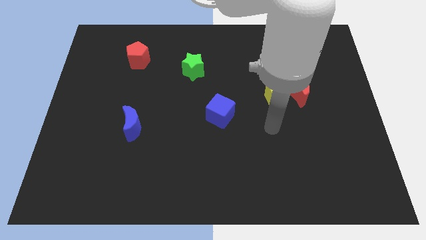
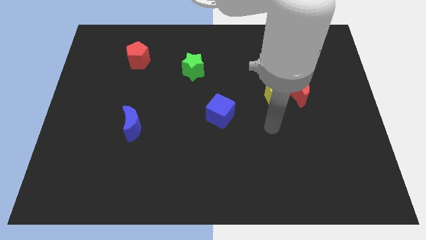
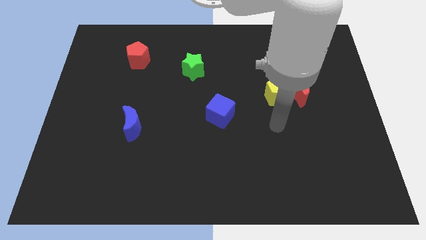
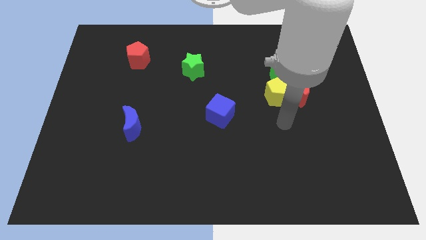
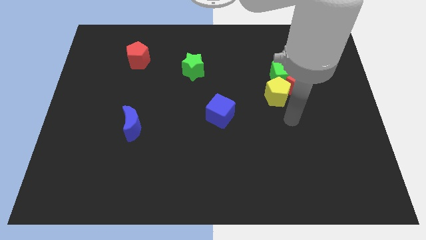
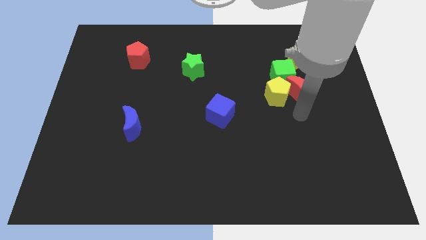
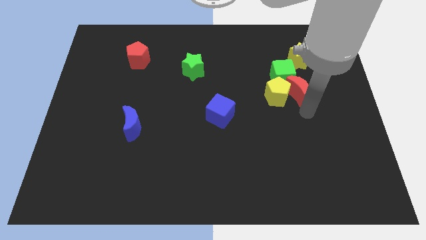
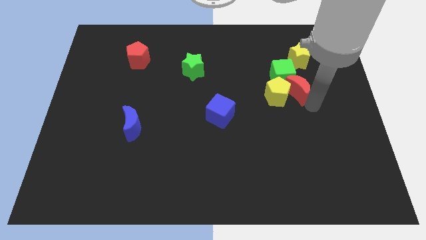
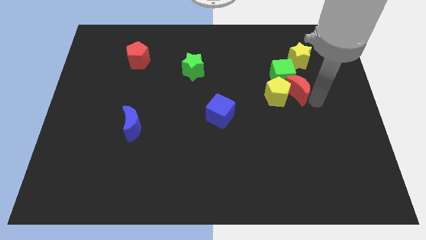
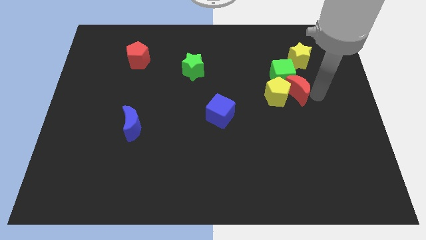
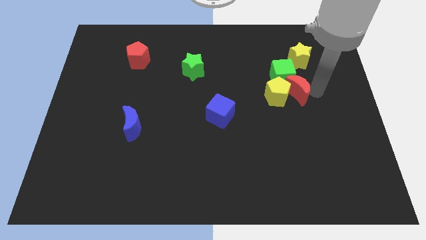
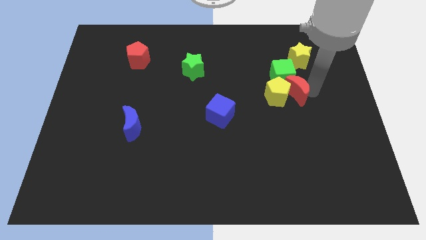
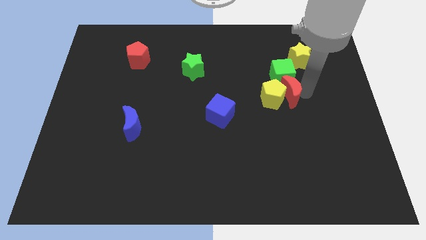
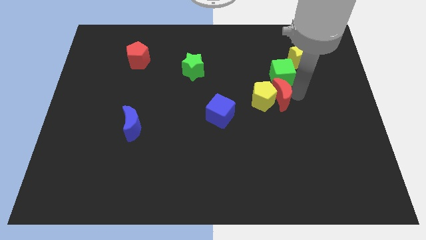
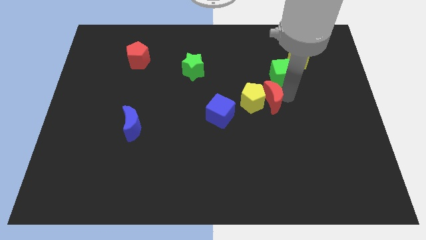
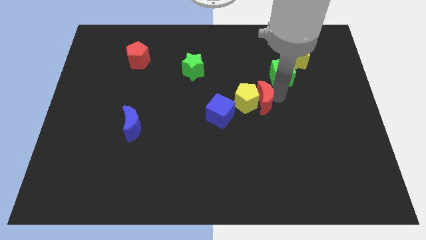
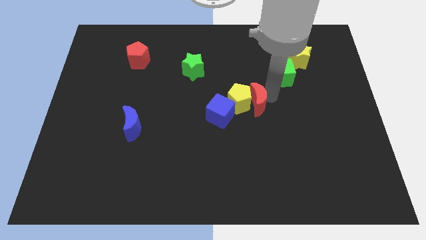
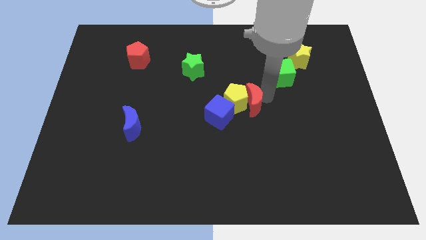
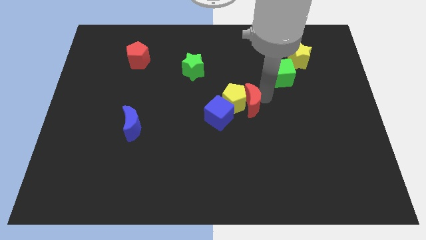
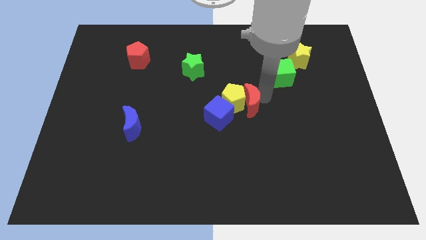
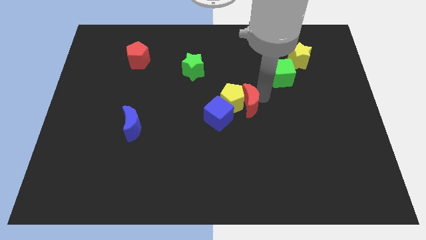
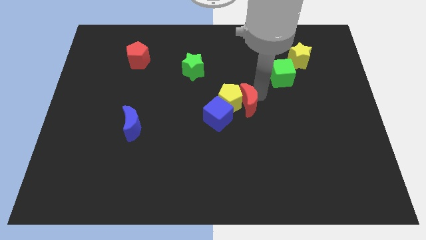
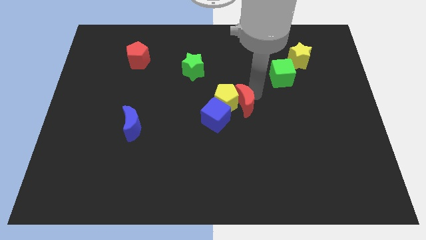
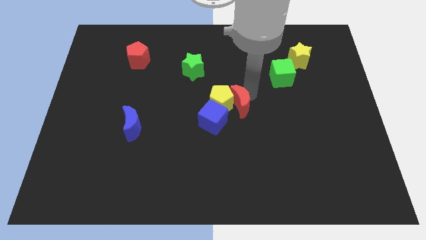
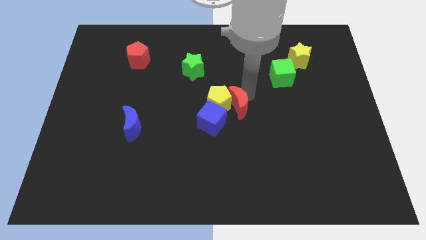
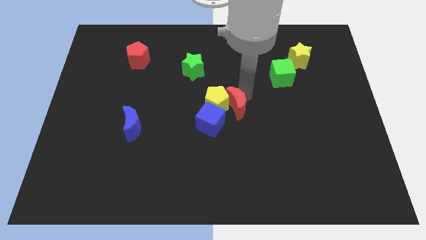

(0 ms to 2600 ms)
push the red moon along with the yellow pentagon into the blue cube

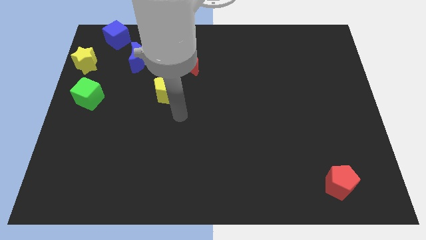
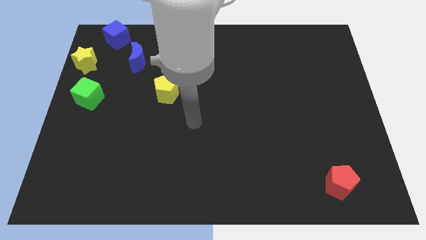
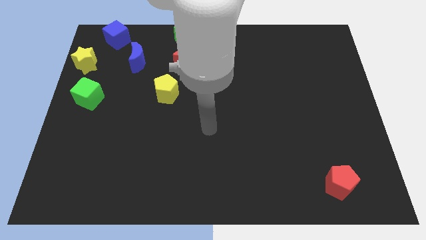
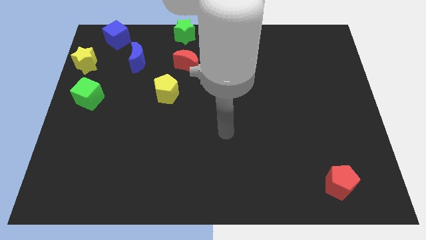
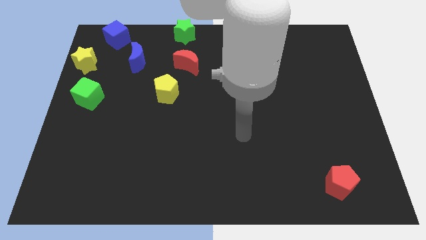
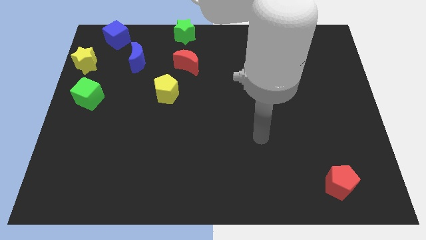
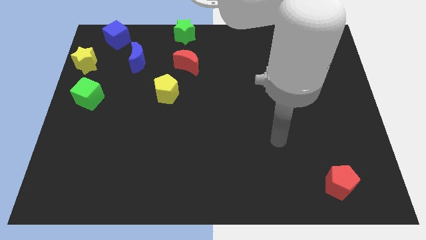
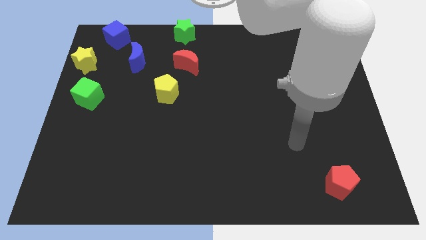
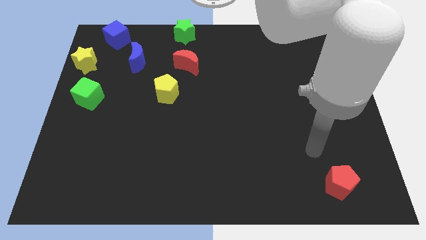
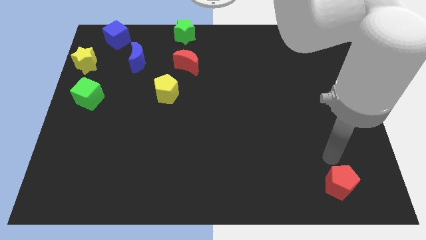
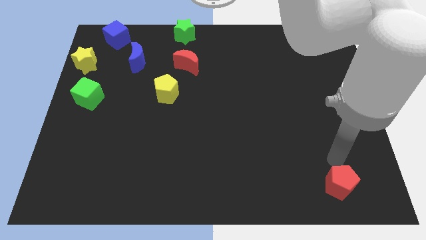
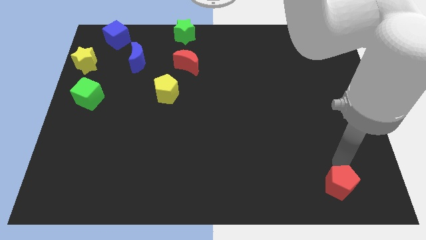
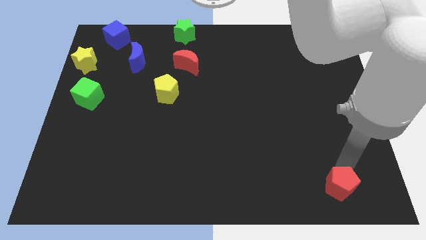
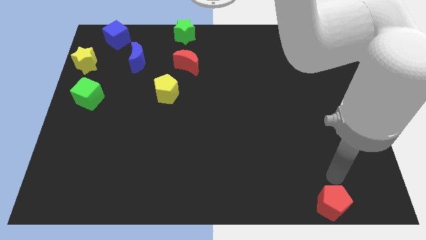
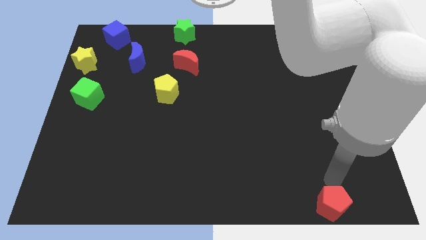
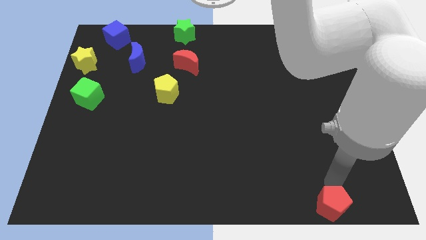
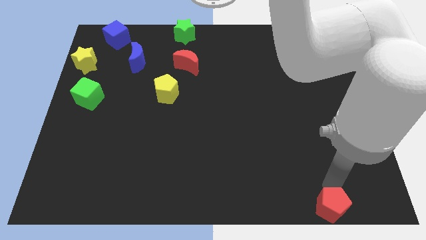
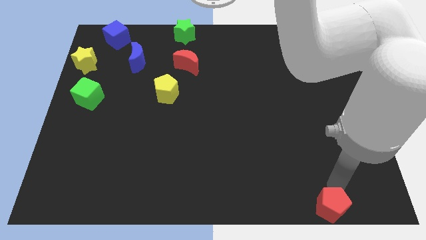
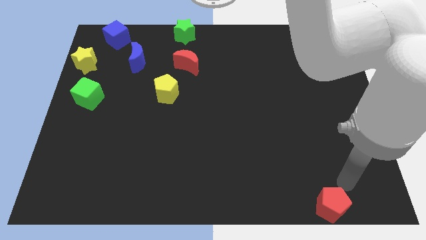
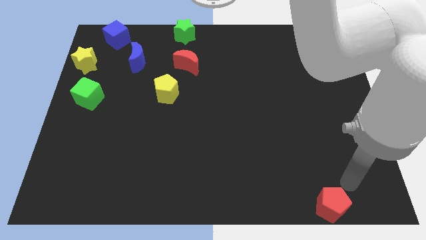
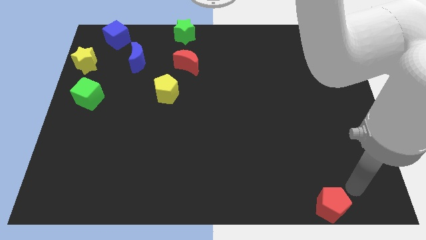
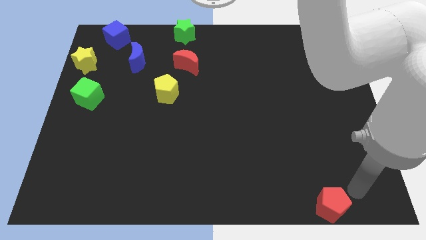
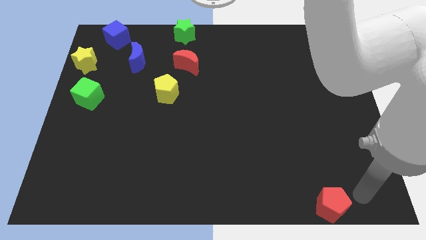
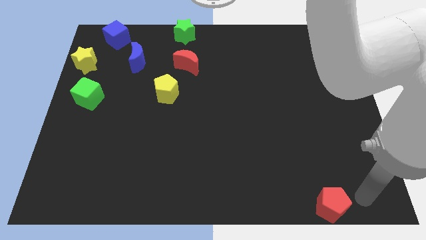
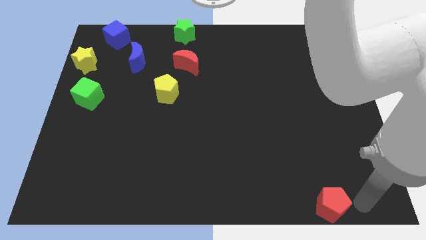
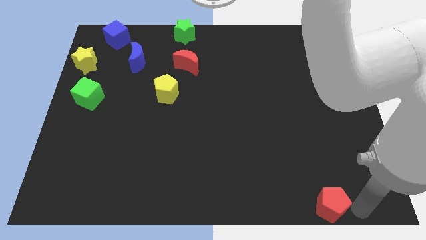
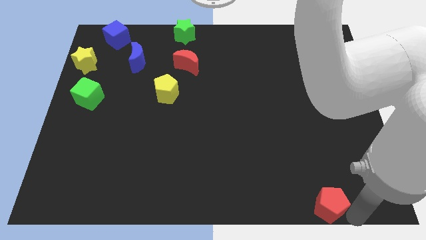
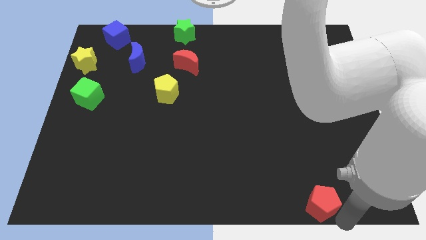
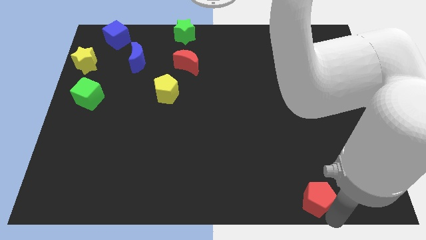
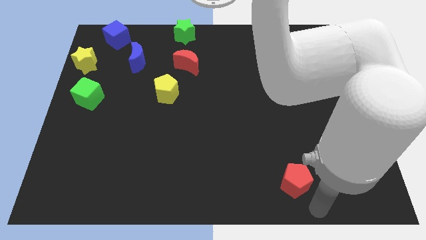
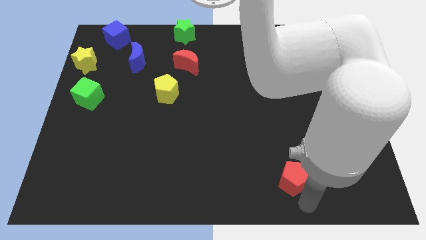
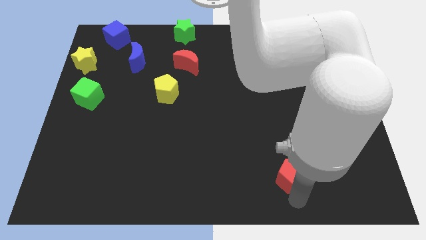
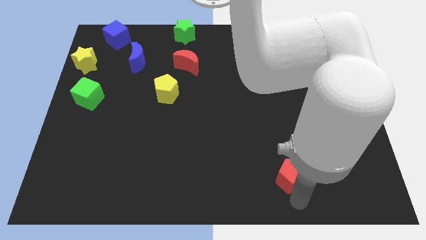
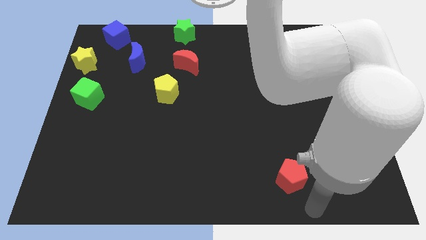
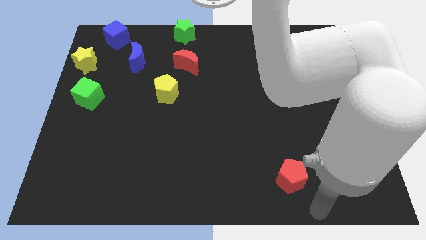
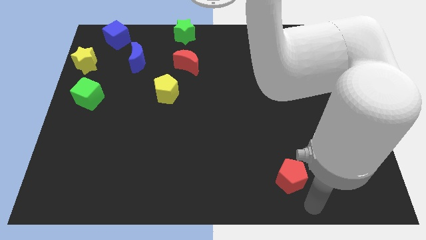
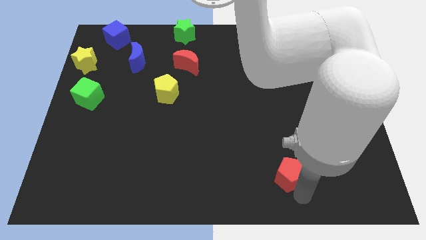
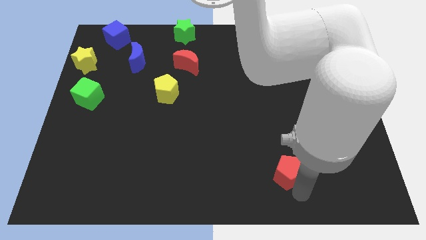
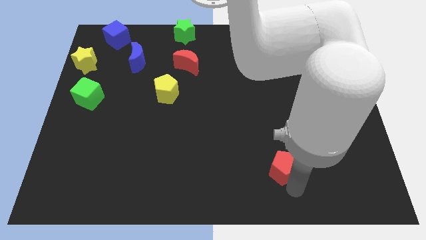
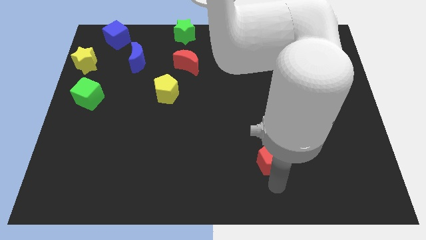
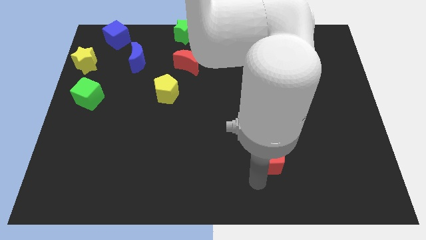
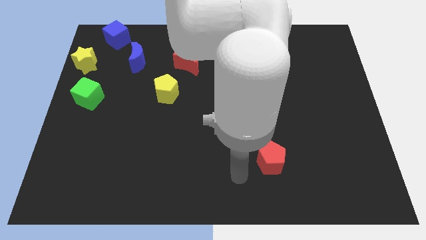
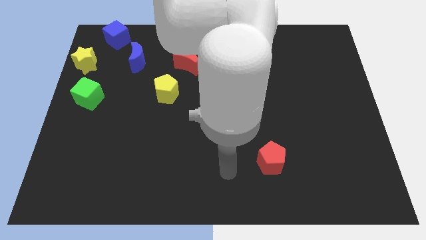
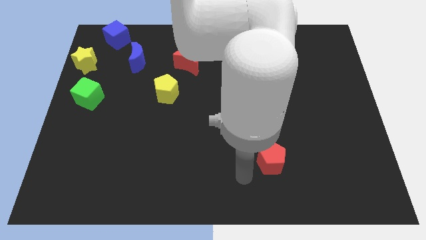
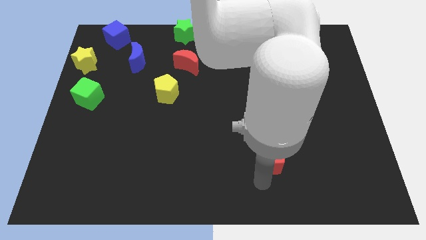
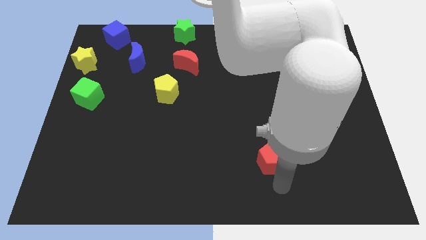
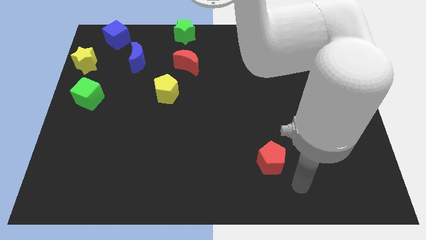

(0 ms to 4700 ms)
move red pentagon slightly up

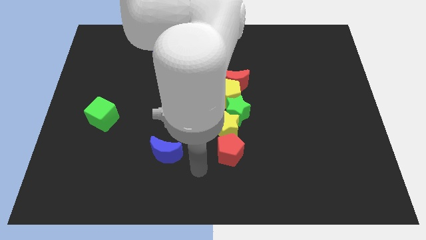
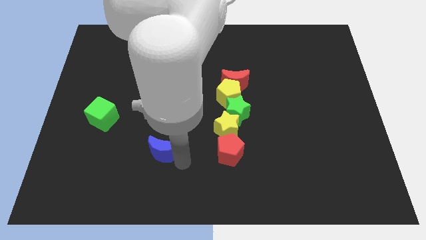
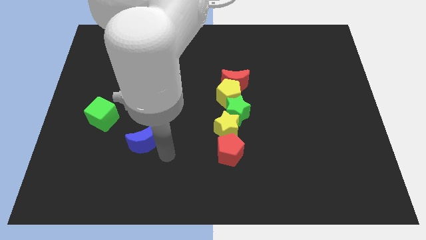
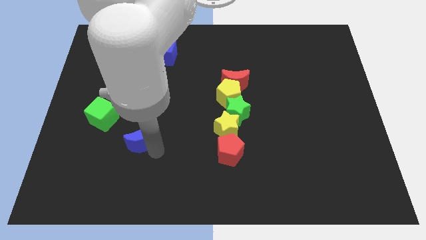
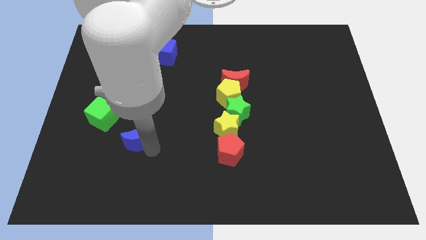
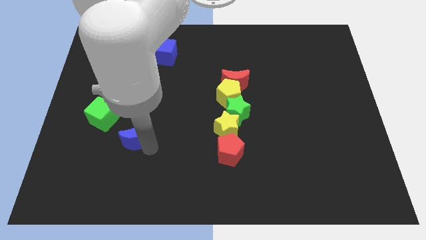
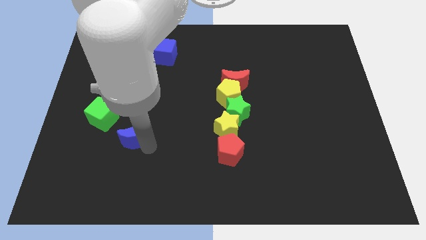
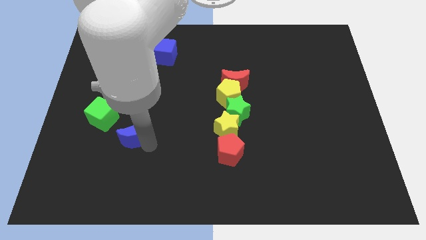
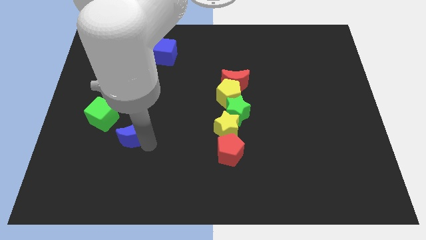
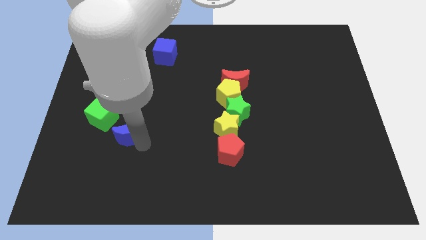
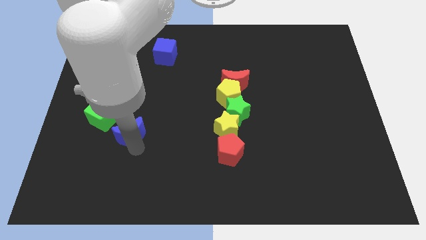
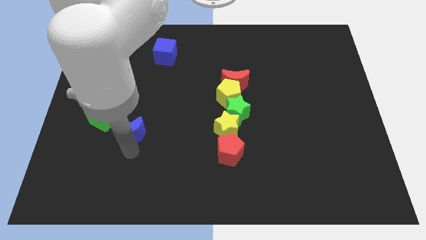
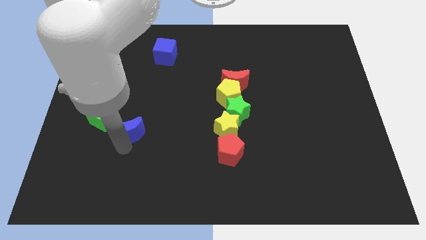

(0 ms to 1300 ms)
push the blue moon close to the green cube

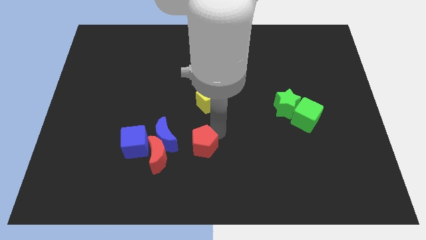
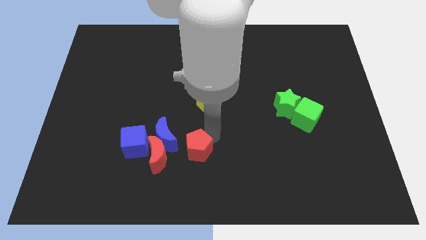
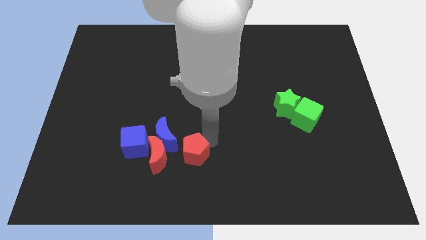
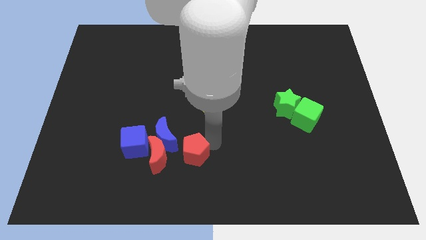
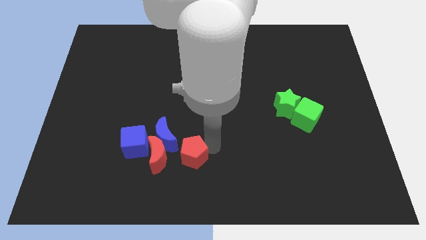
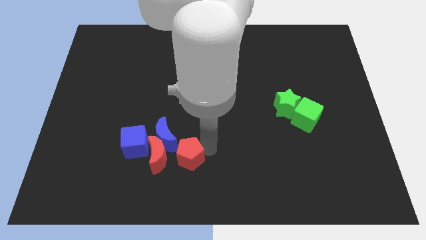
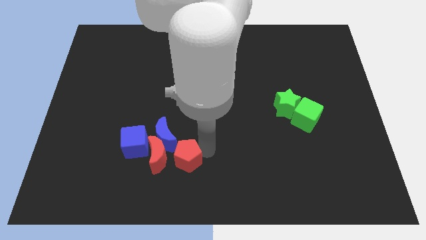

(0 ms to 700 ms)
push the red pentagon to the bottom of the blue crecent
